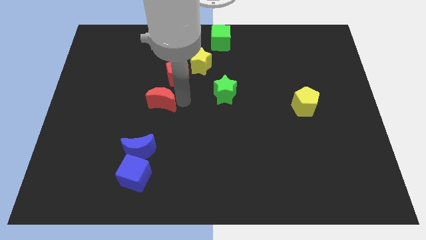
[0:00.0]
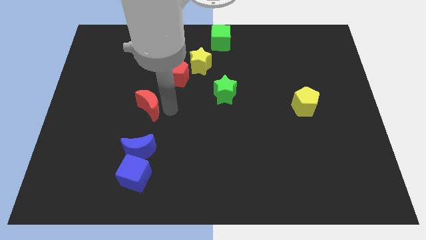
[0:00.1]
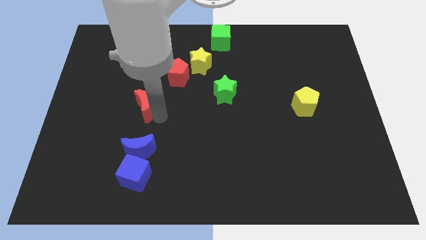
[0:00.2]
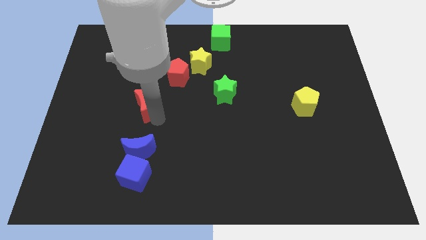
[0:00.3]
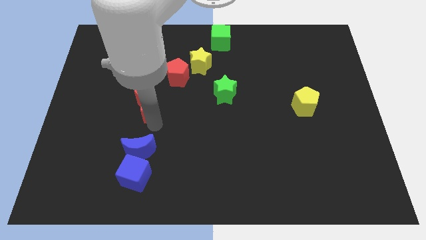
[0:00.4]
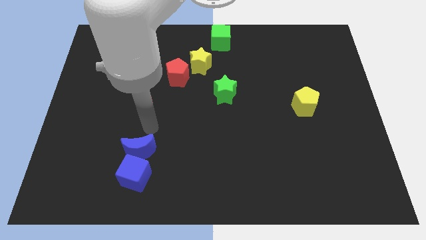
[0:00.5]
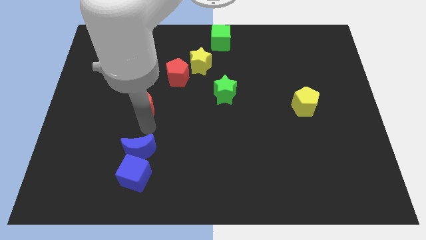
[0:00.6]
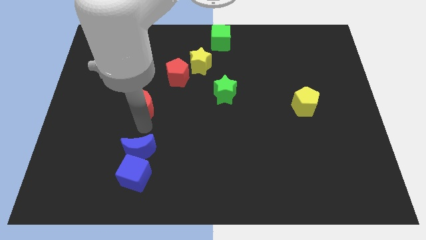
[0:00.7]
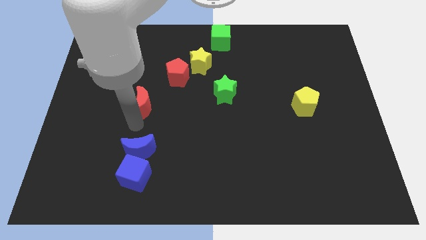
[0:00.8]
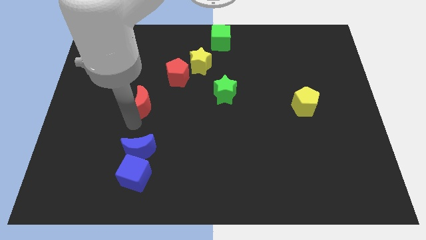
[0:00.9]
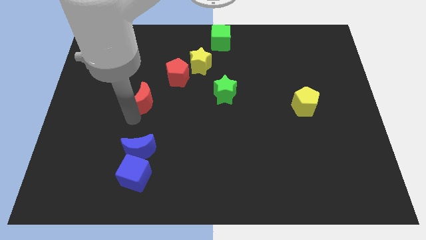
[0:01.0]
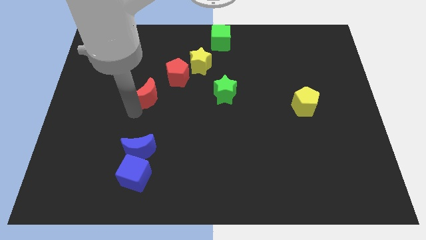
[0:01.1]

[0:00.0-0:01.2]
move the arm towards the red crescent

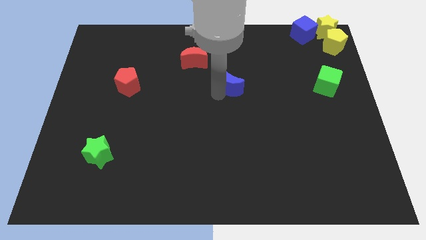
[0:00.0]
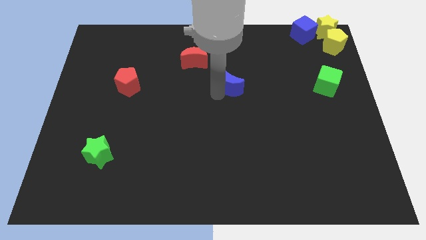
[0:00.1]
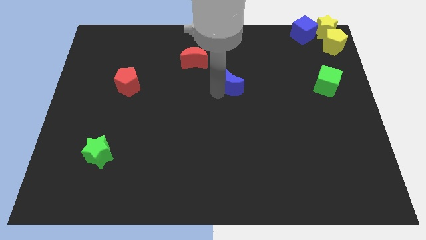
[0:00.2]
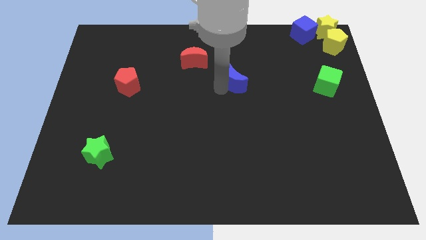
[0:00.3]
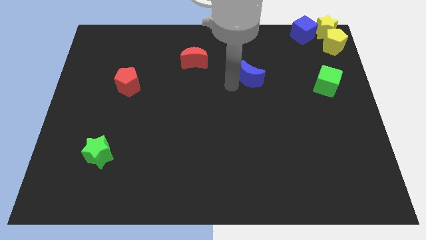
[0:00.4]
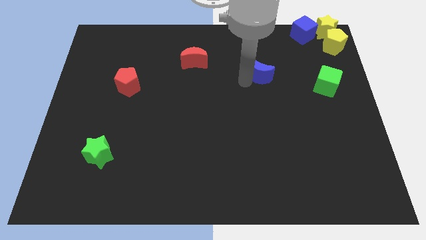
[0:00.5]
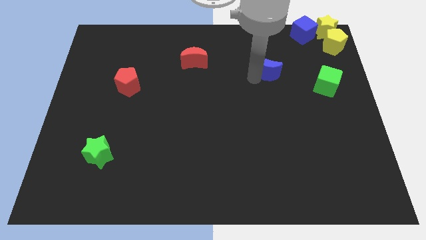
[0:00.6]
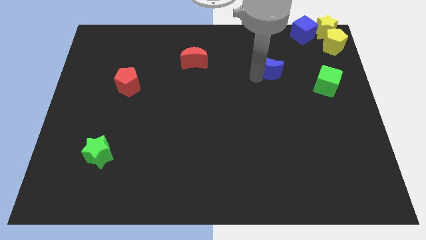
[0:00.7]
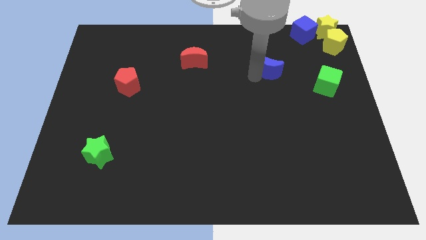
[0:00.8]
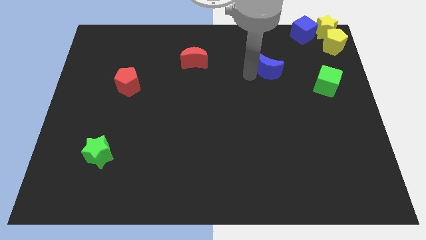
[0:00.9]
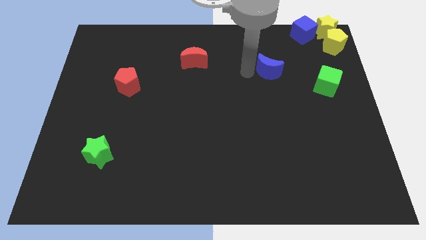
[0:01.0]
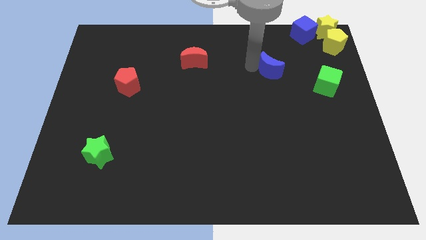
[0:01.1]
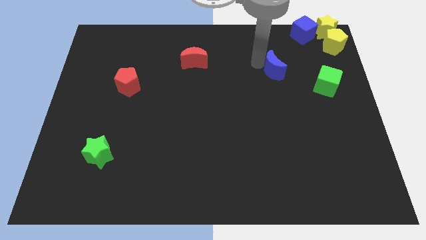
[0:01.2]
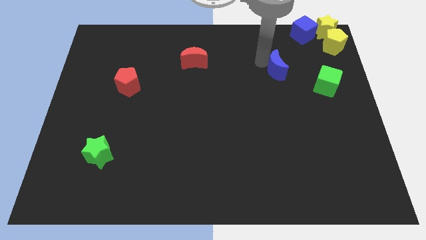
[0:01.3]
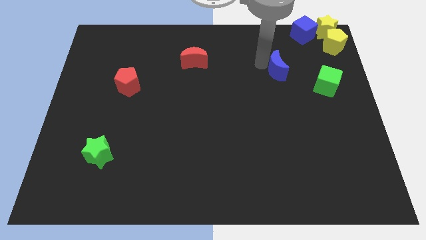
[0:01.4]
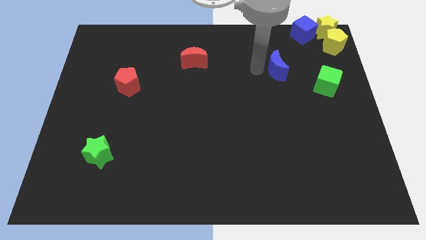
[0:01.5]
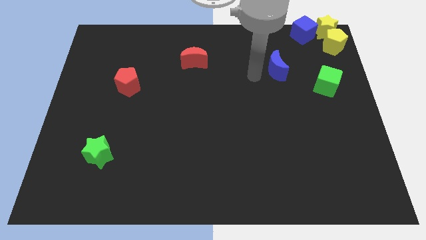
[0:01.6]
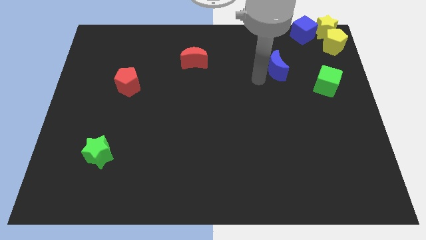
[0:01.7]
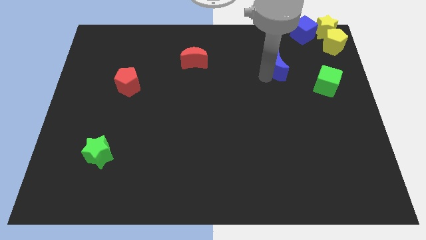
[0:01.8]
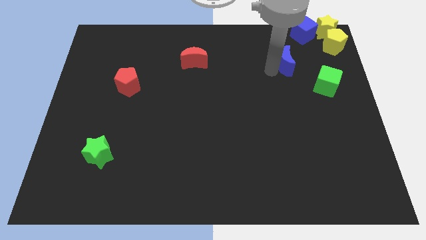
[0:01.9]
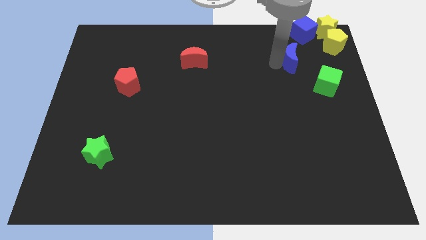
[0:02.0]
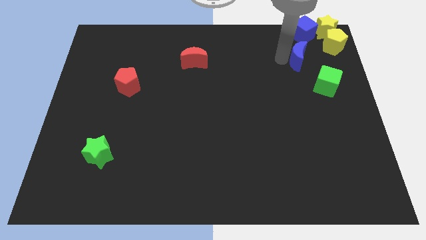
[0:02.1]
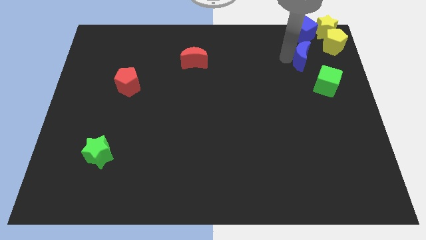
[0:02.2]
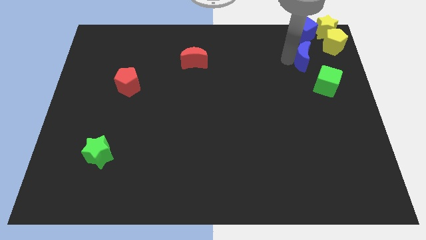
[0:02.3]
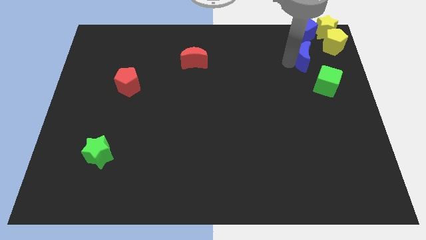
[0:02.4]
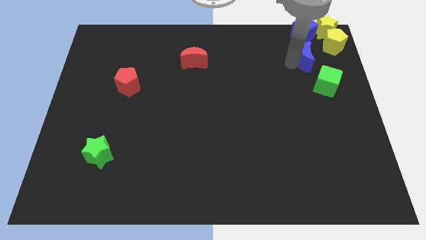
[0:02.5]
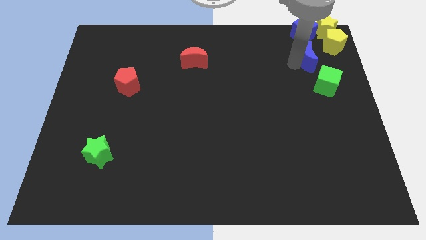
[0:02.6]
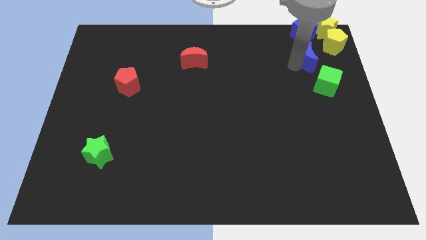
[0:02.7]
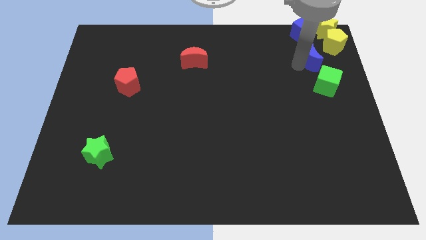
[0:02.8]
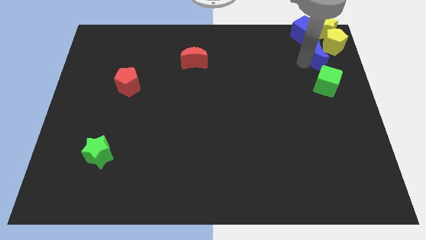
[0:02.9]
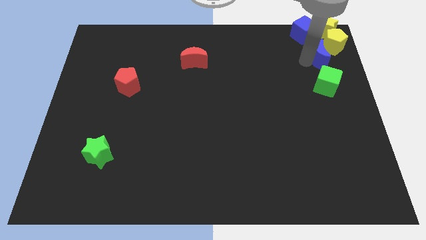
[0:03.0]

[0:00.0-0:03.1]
push the blue crescent under the yellow pentagon

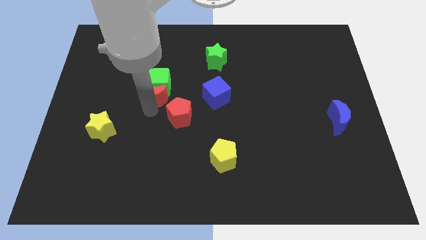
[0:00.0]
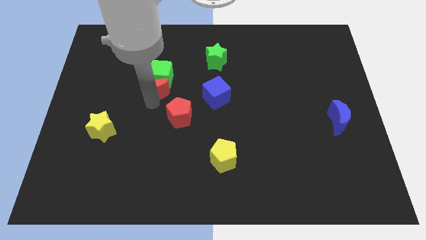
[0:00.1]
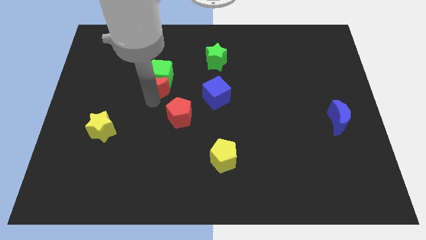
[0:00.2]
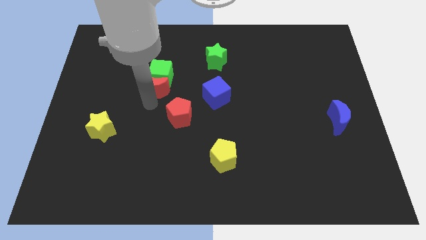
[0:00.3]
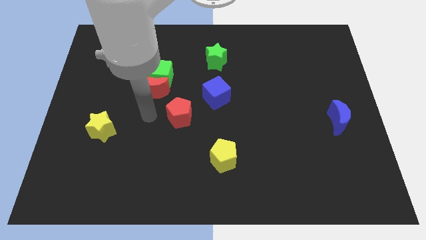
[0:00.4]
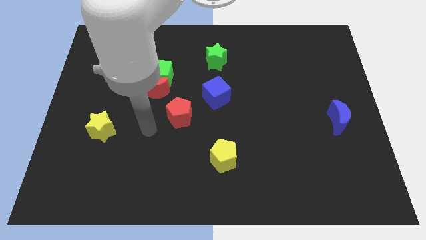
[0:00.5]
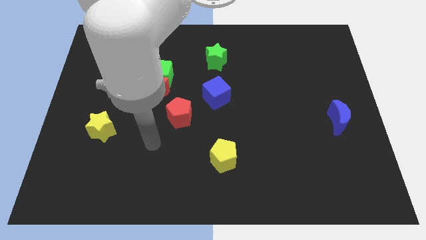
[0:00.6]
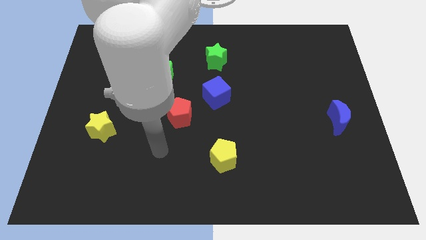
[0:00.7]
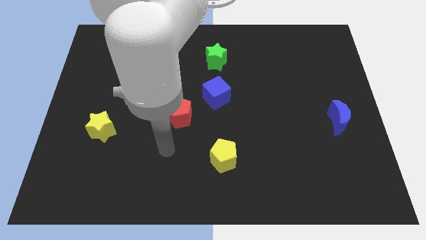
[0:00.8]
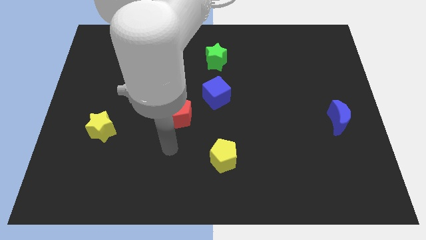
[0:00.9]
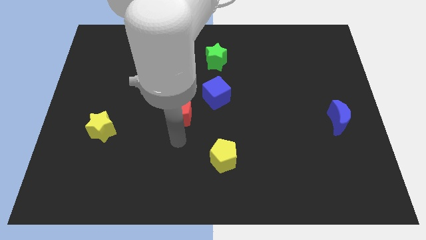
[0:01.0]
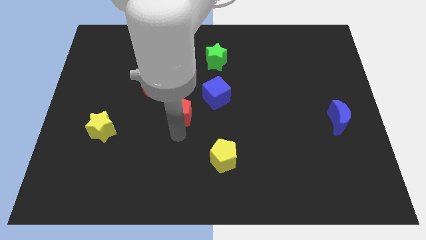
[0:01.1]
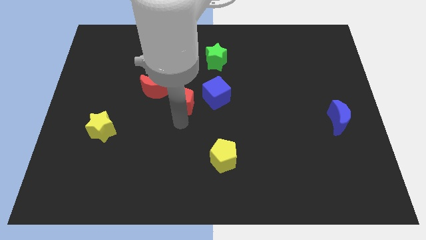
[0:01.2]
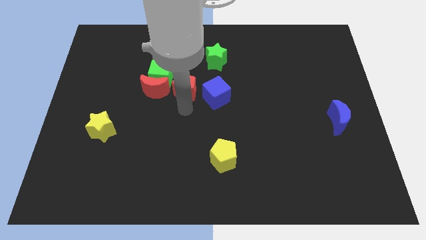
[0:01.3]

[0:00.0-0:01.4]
place the red pentagon to the right side of the red crescent

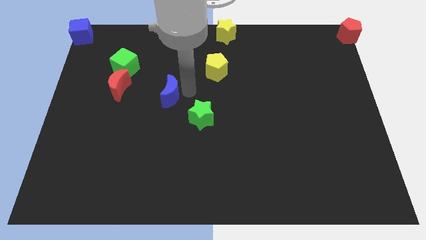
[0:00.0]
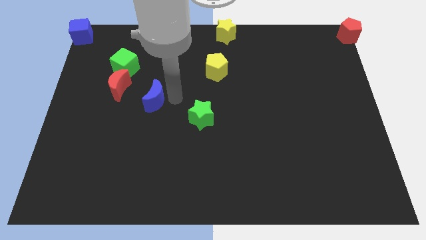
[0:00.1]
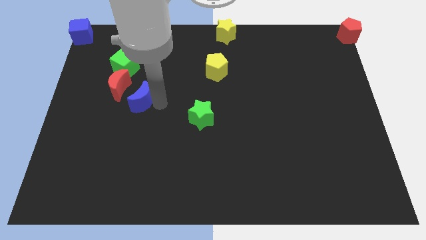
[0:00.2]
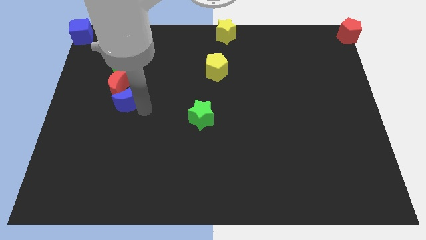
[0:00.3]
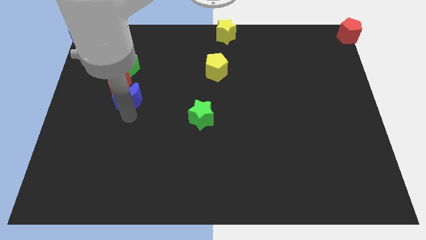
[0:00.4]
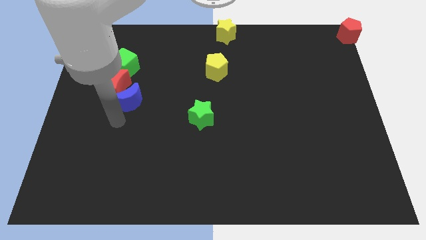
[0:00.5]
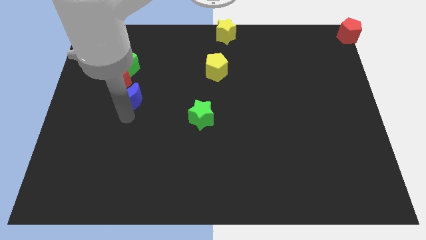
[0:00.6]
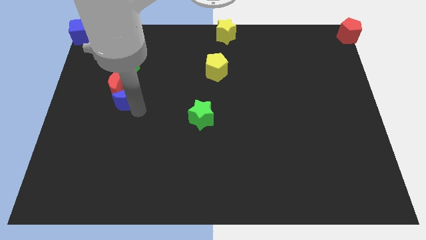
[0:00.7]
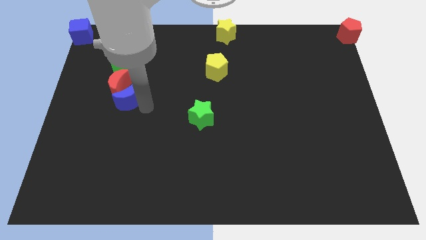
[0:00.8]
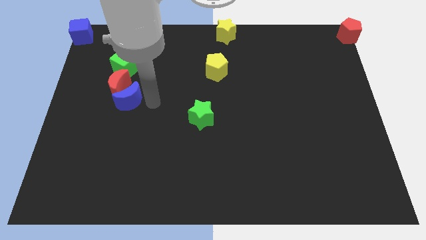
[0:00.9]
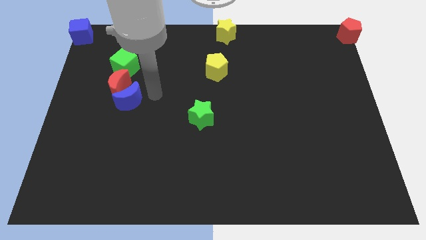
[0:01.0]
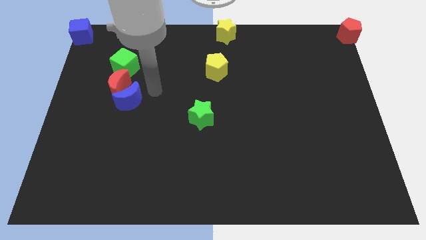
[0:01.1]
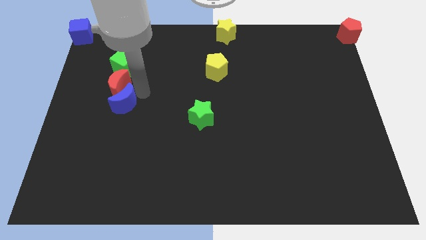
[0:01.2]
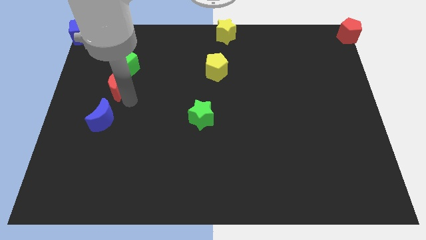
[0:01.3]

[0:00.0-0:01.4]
push blue crescent below red crescent

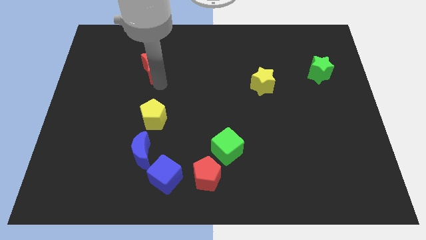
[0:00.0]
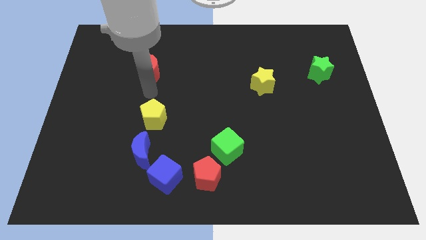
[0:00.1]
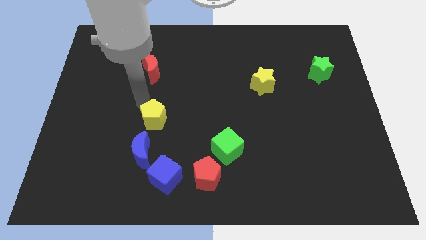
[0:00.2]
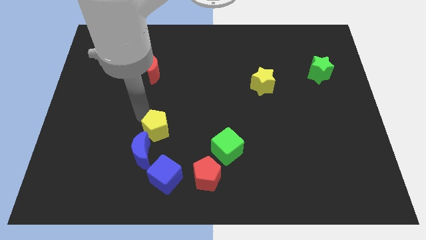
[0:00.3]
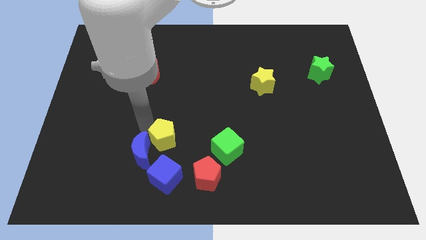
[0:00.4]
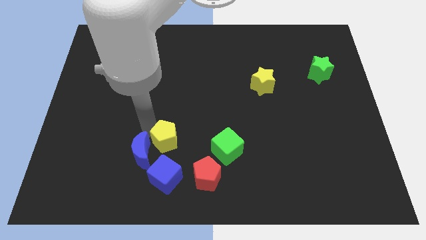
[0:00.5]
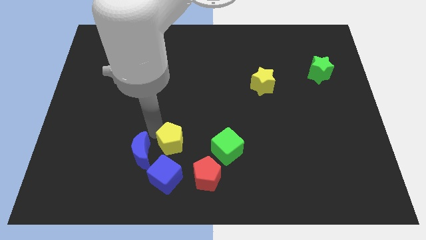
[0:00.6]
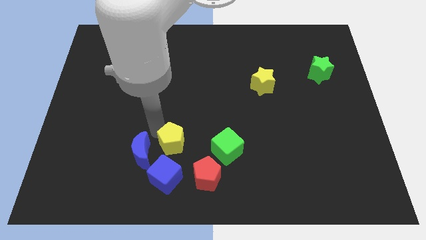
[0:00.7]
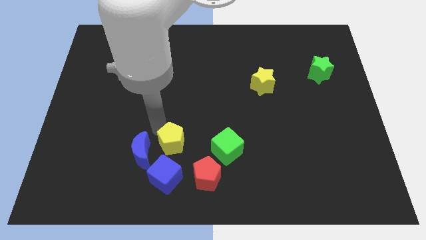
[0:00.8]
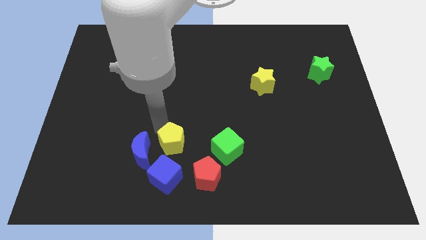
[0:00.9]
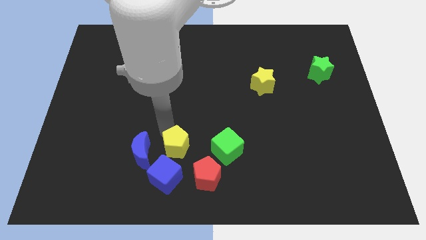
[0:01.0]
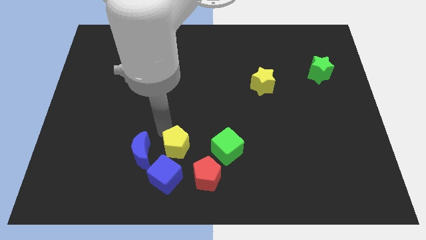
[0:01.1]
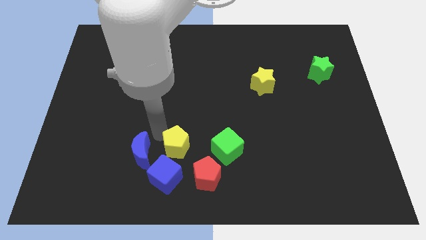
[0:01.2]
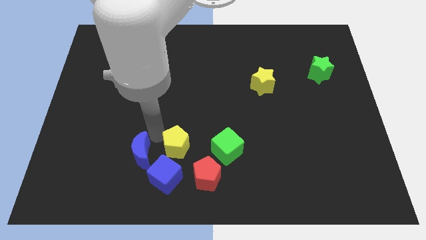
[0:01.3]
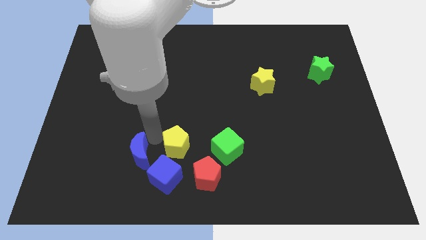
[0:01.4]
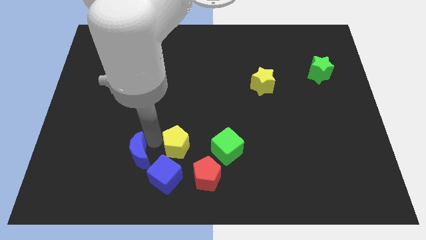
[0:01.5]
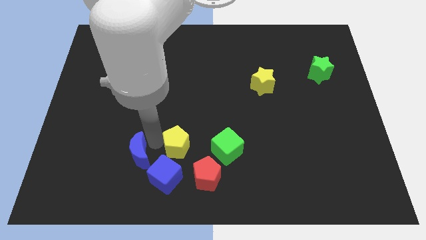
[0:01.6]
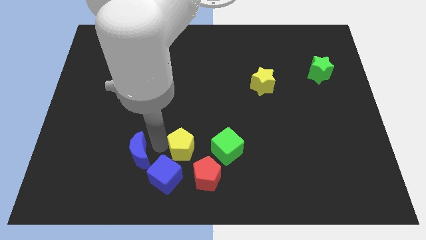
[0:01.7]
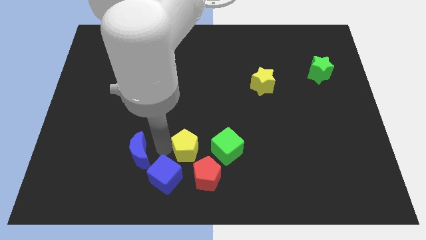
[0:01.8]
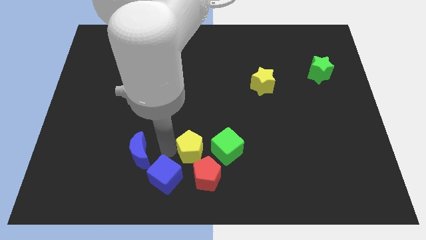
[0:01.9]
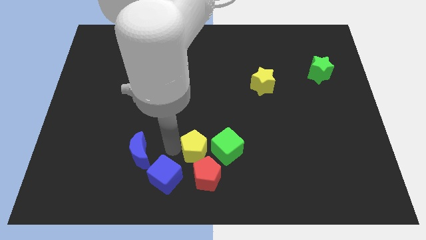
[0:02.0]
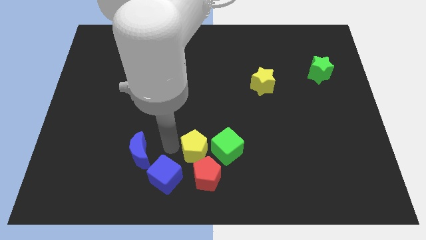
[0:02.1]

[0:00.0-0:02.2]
place the yellow pentagon left to the green cube
